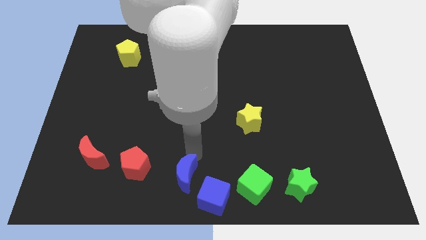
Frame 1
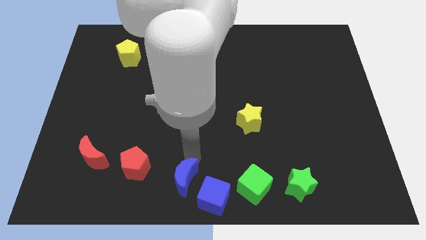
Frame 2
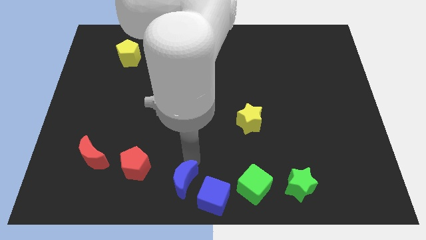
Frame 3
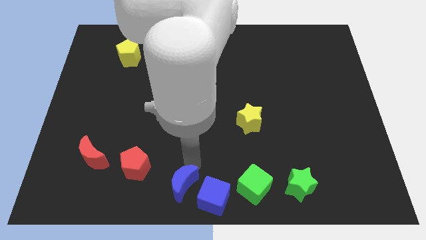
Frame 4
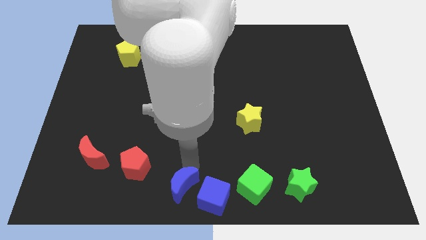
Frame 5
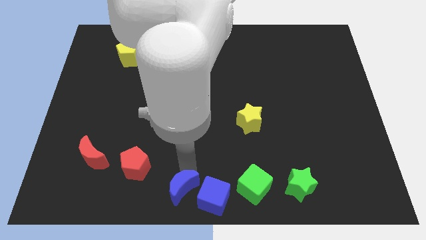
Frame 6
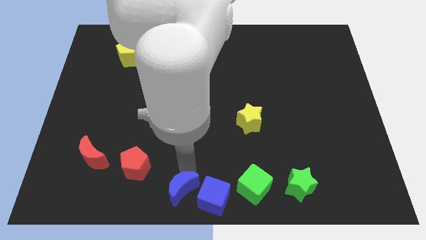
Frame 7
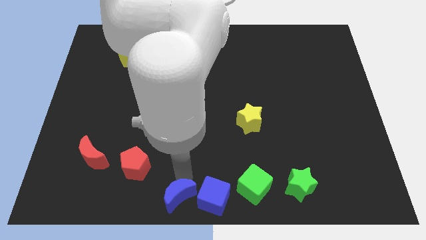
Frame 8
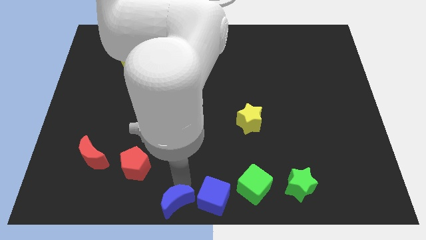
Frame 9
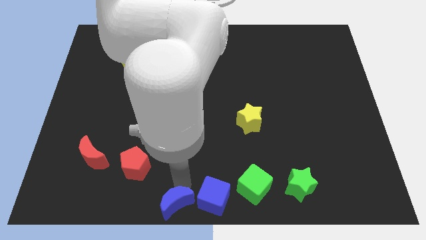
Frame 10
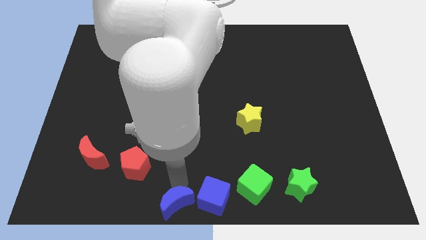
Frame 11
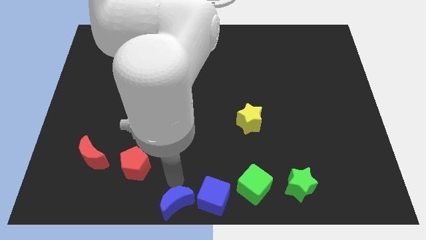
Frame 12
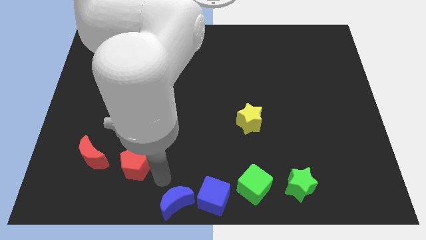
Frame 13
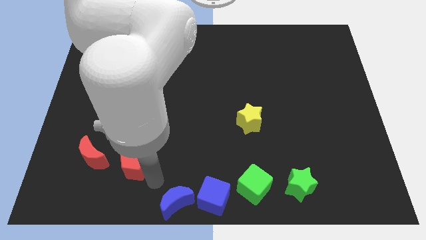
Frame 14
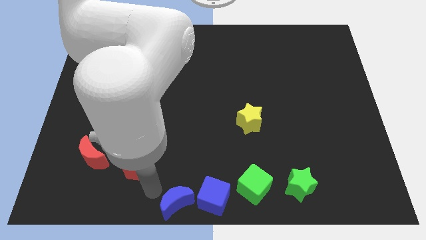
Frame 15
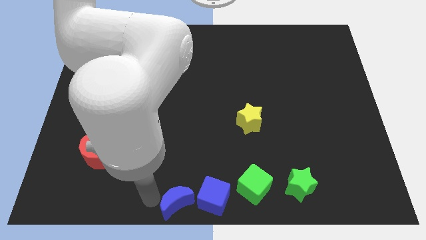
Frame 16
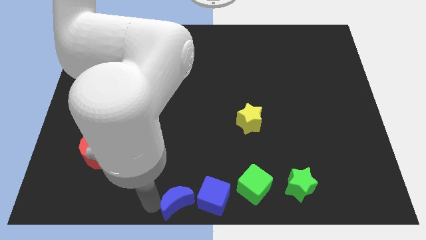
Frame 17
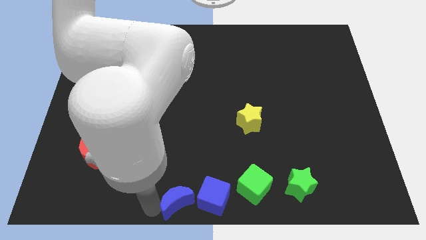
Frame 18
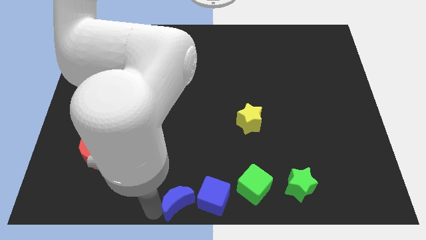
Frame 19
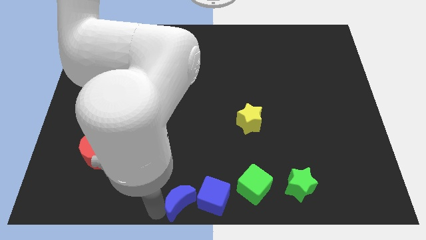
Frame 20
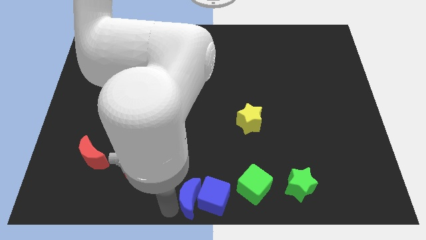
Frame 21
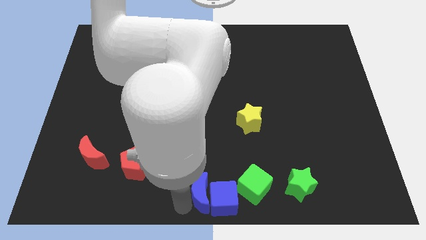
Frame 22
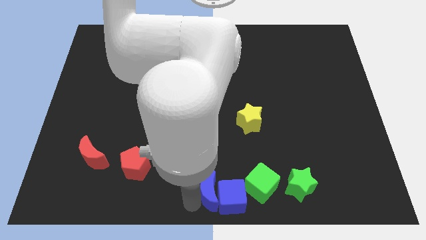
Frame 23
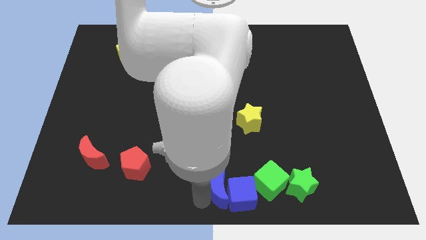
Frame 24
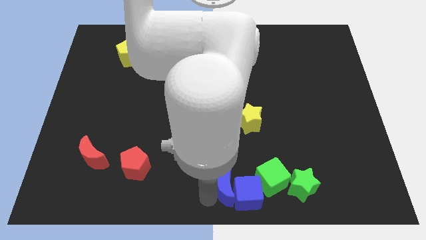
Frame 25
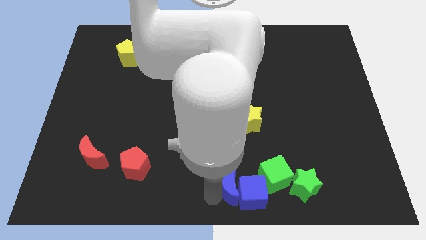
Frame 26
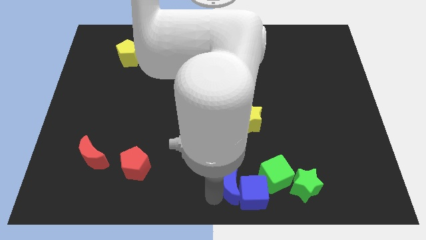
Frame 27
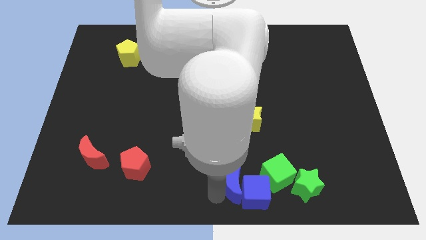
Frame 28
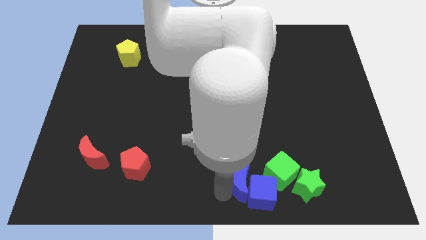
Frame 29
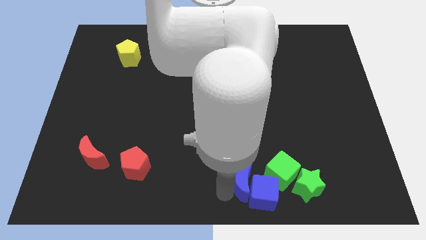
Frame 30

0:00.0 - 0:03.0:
slide the blue blocks to the right

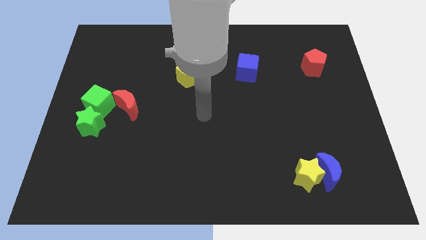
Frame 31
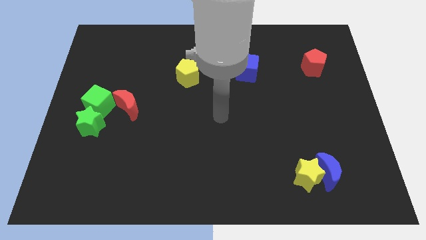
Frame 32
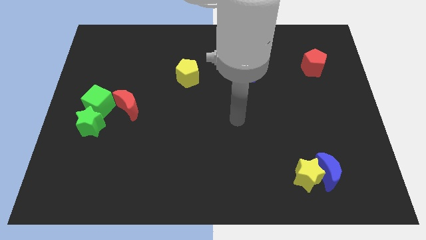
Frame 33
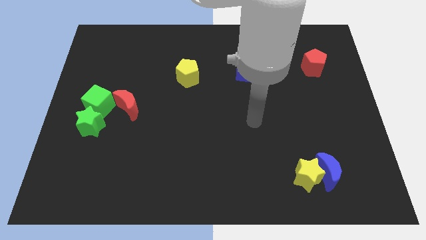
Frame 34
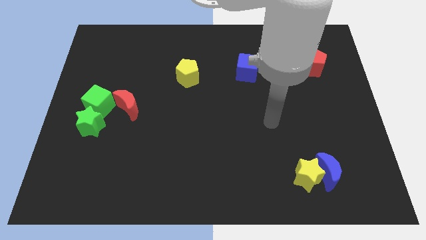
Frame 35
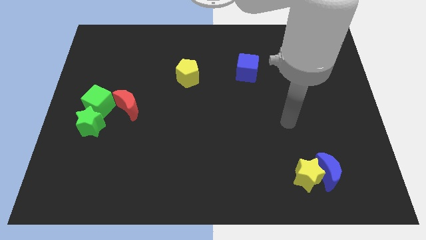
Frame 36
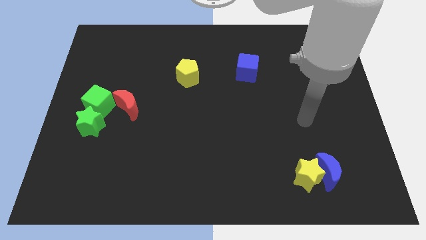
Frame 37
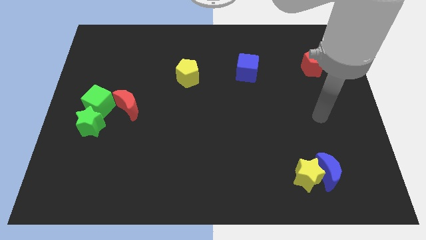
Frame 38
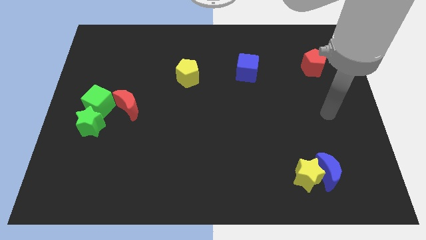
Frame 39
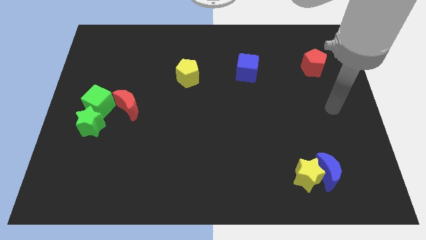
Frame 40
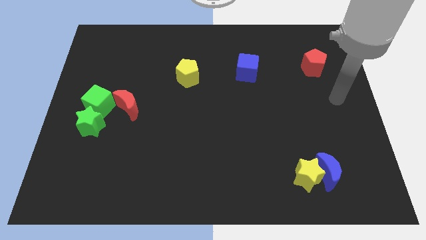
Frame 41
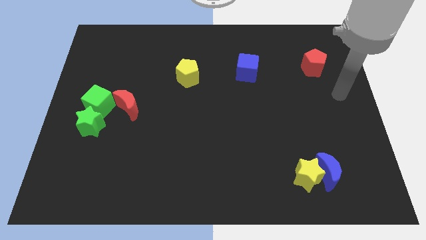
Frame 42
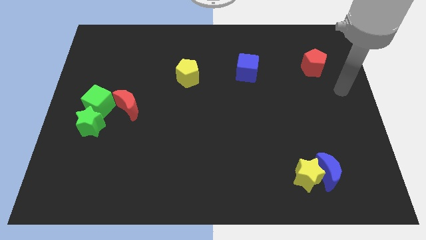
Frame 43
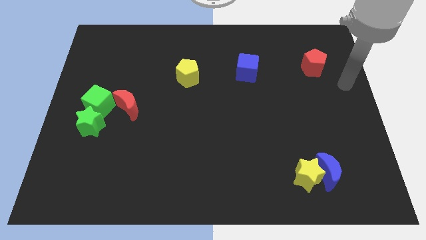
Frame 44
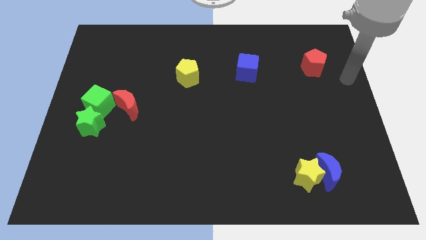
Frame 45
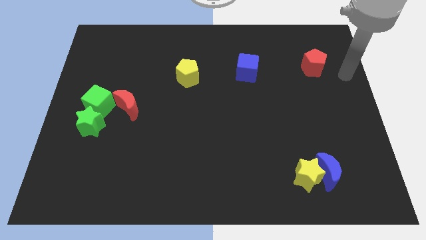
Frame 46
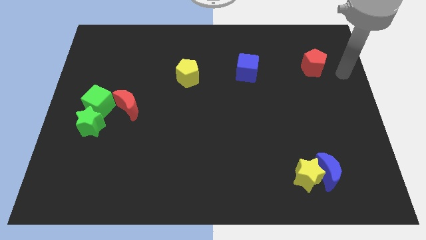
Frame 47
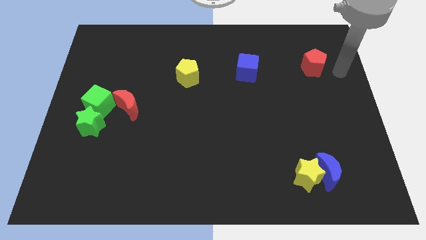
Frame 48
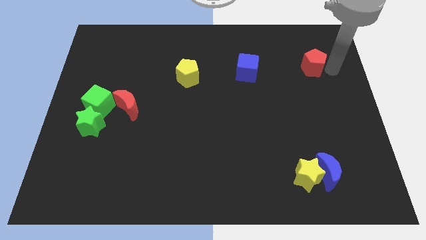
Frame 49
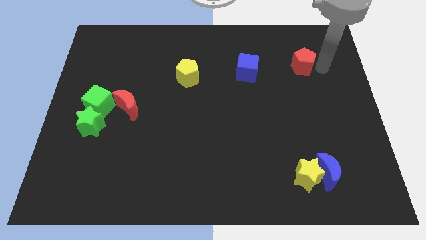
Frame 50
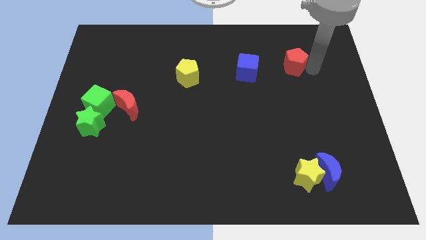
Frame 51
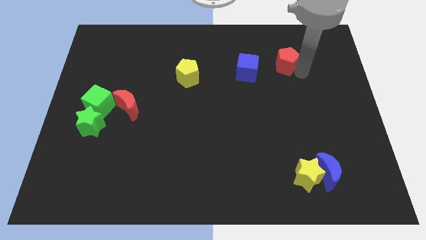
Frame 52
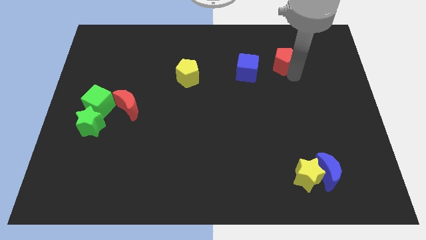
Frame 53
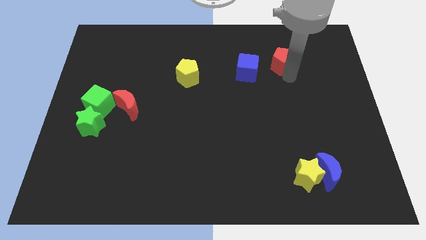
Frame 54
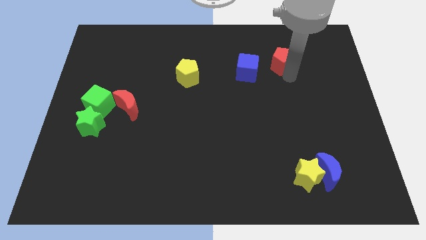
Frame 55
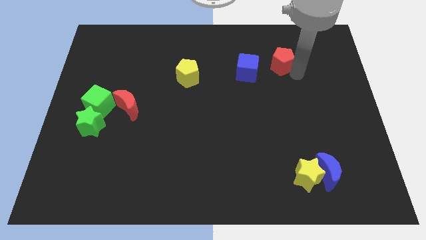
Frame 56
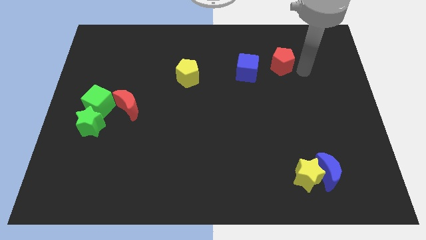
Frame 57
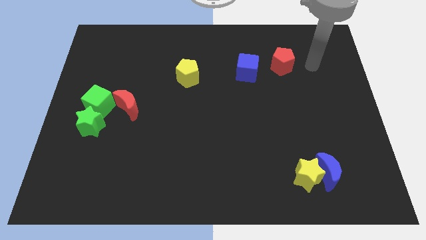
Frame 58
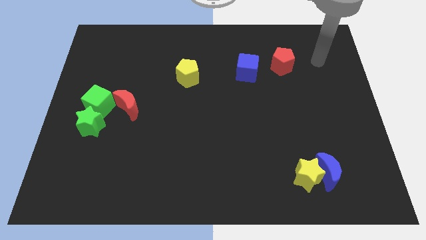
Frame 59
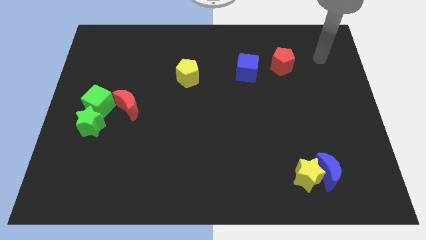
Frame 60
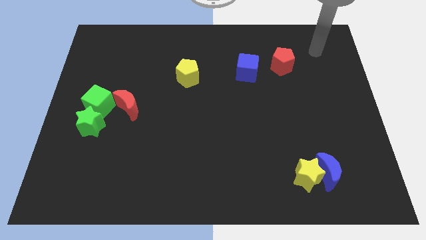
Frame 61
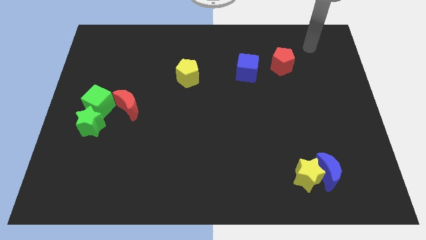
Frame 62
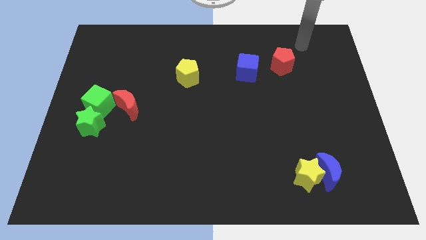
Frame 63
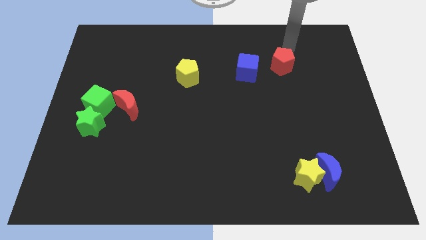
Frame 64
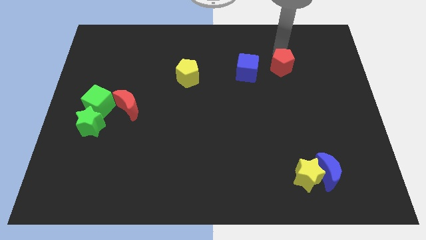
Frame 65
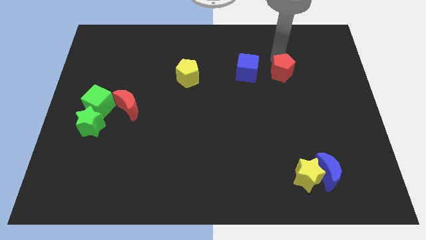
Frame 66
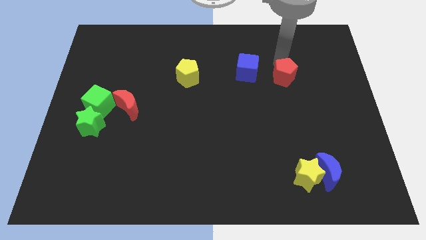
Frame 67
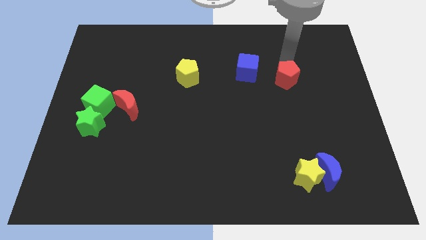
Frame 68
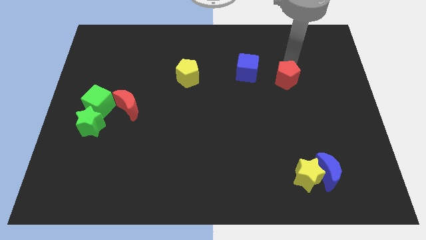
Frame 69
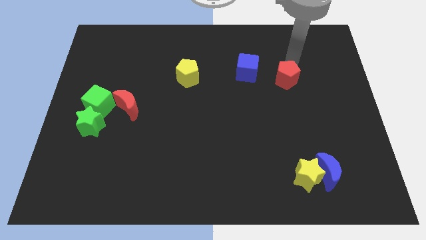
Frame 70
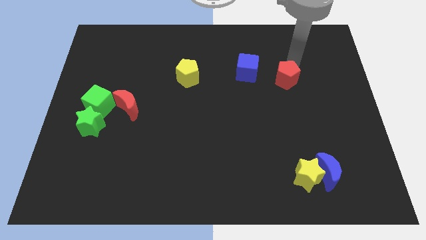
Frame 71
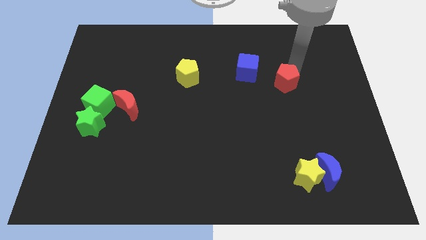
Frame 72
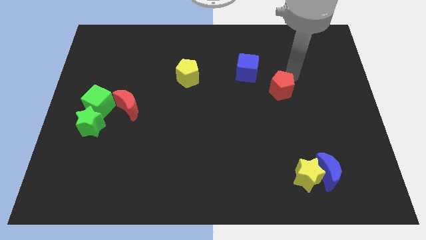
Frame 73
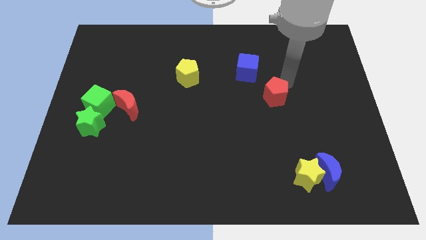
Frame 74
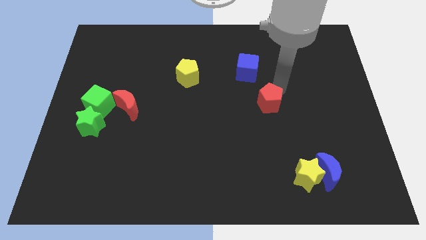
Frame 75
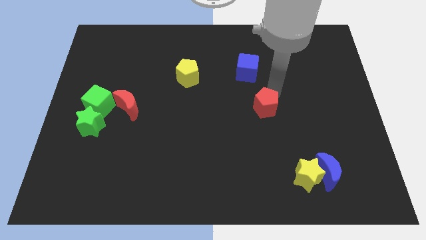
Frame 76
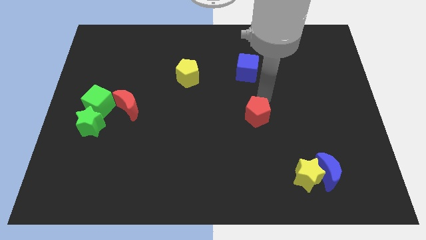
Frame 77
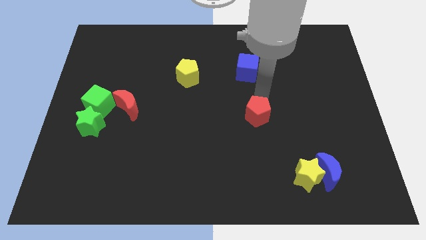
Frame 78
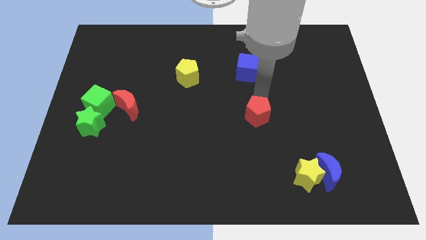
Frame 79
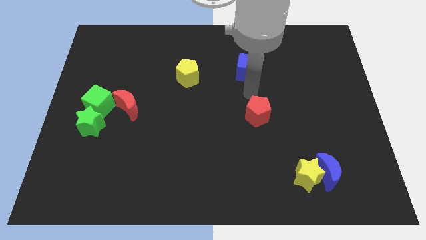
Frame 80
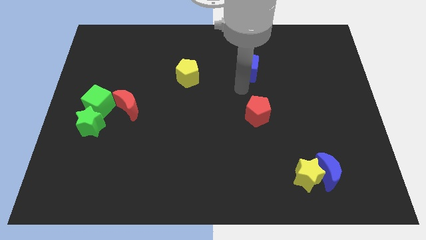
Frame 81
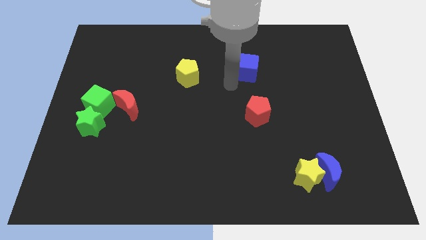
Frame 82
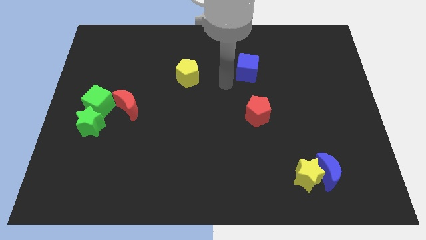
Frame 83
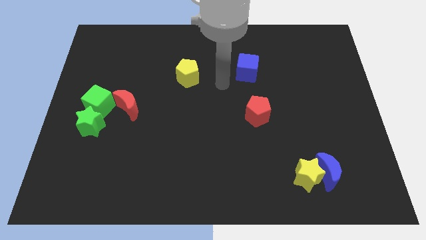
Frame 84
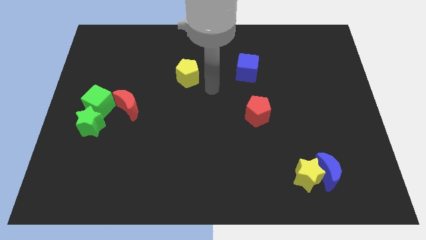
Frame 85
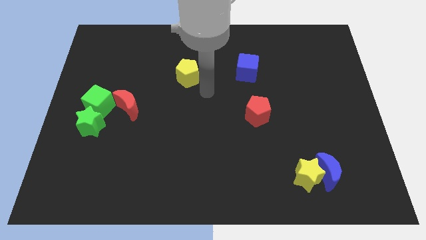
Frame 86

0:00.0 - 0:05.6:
push the red pentagon below the blue cube

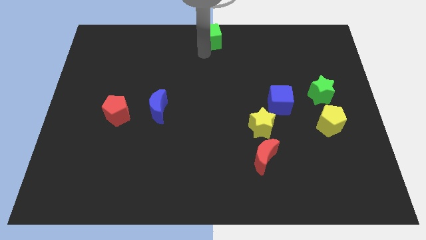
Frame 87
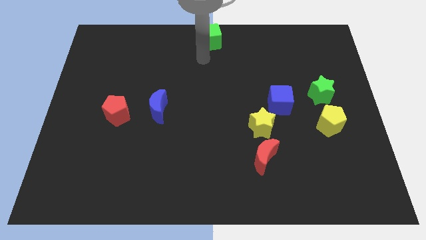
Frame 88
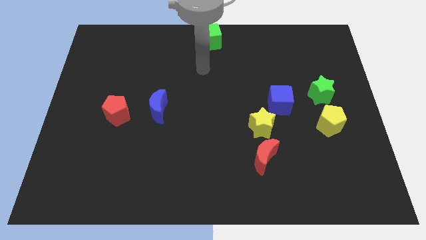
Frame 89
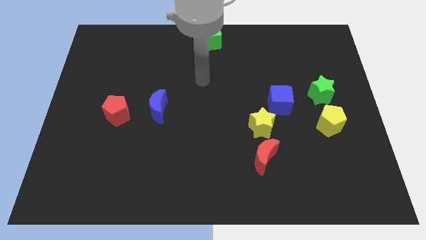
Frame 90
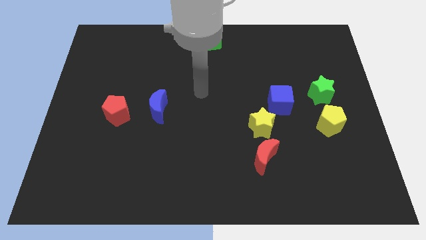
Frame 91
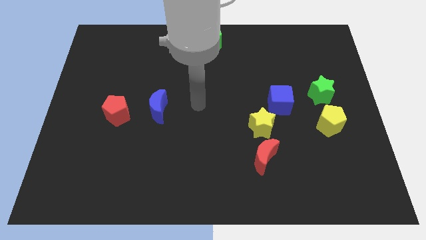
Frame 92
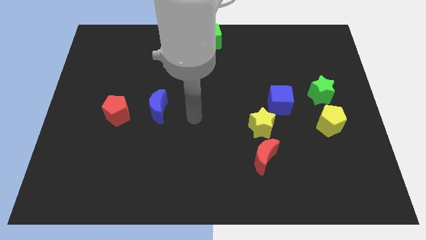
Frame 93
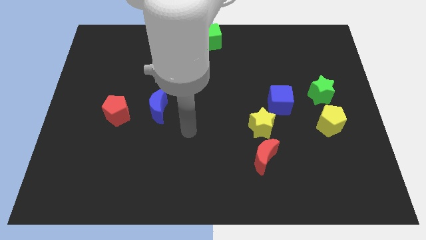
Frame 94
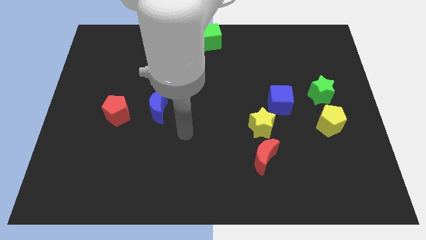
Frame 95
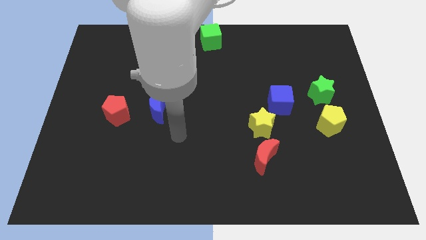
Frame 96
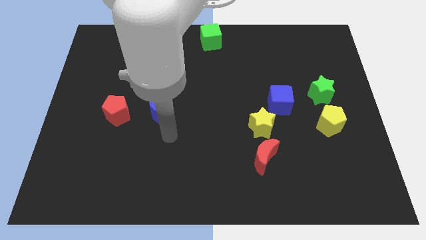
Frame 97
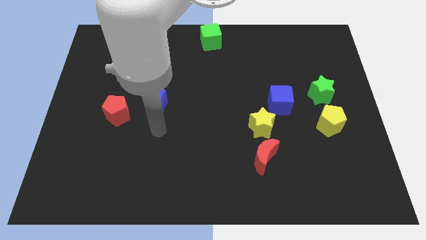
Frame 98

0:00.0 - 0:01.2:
move your hand to the bottom of the blue crescent
